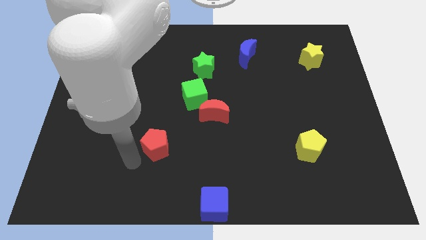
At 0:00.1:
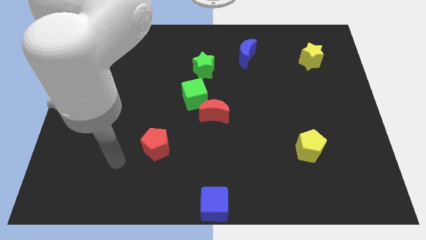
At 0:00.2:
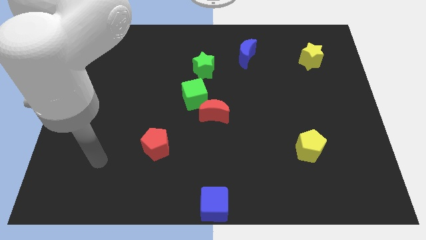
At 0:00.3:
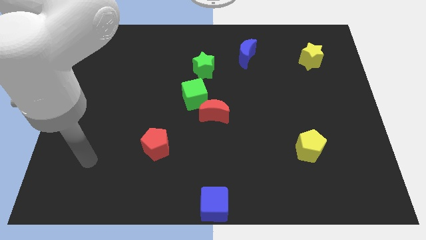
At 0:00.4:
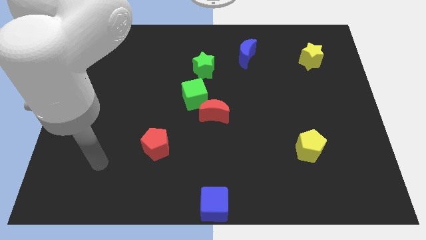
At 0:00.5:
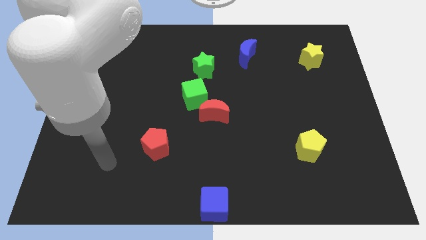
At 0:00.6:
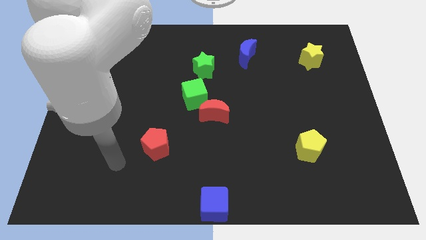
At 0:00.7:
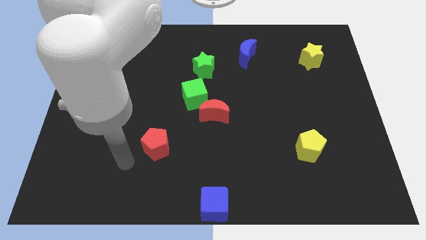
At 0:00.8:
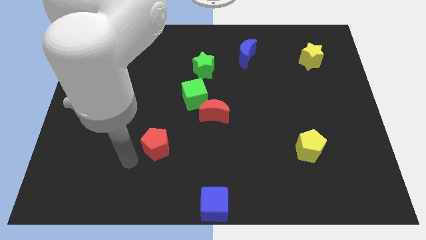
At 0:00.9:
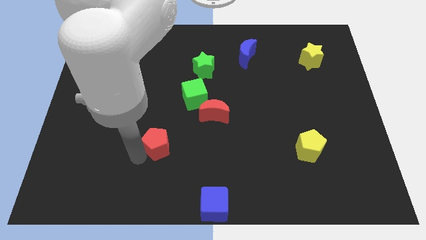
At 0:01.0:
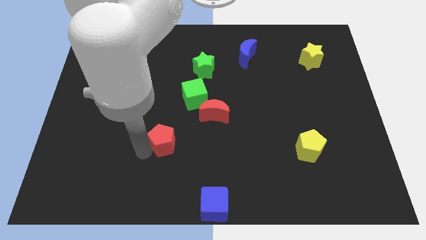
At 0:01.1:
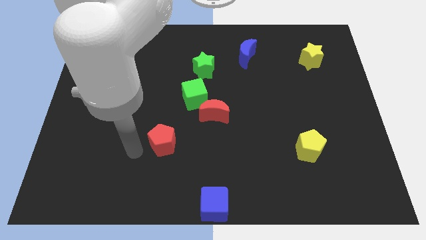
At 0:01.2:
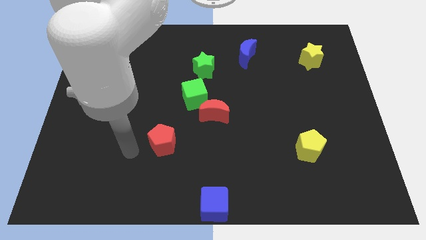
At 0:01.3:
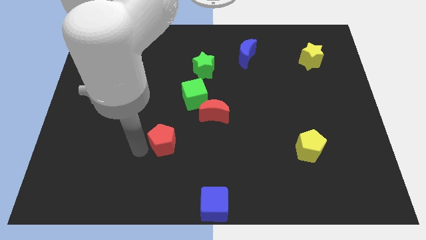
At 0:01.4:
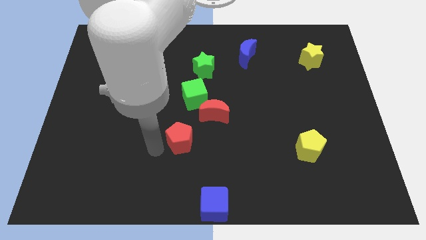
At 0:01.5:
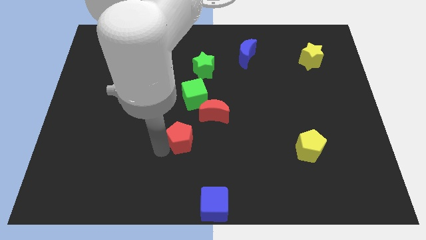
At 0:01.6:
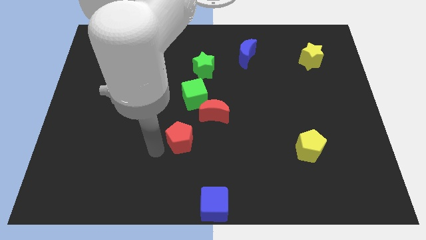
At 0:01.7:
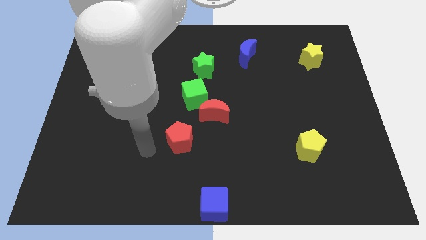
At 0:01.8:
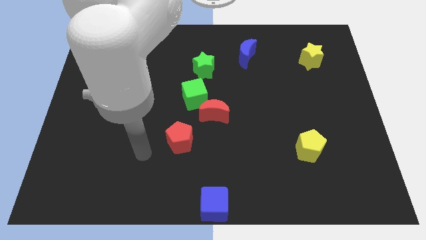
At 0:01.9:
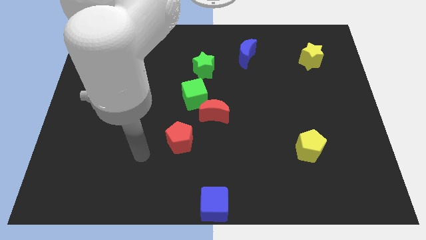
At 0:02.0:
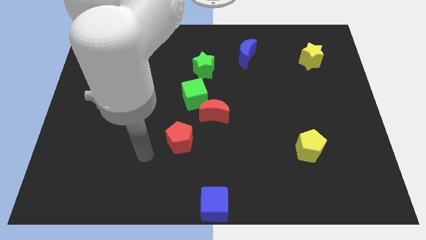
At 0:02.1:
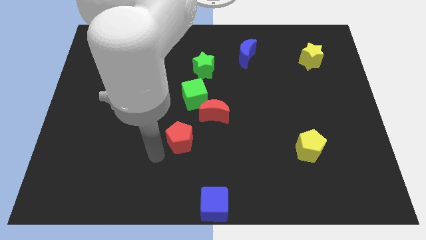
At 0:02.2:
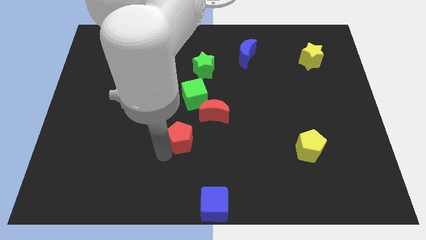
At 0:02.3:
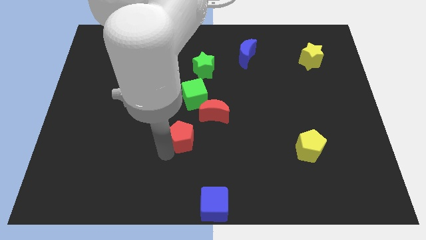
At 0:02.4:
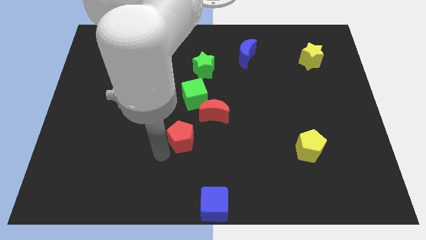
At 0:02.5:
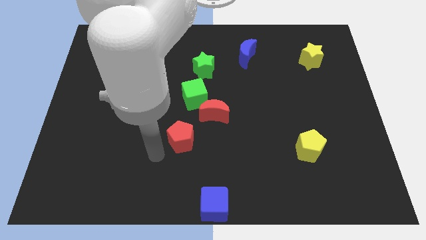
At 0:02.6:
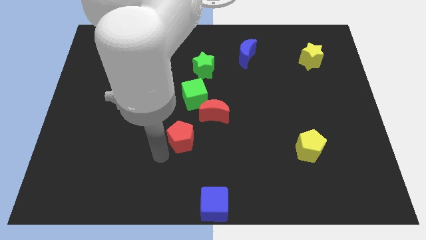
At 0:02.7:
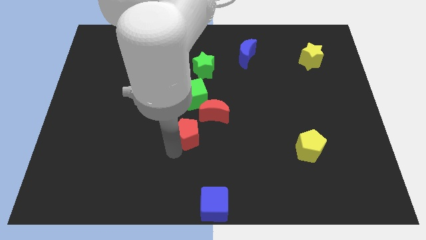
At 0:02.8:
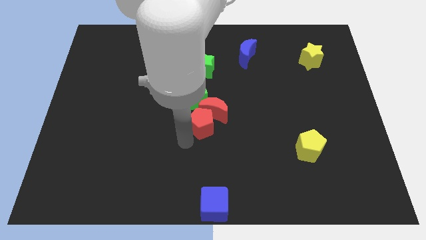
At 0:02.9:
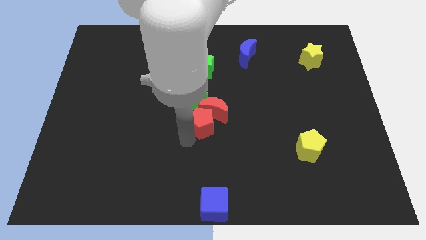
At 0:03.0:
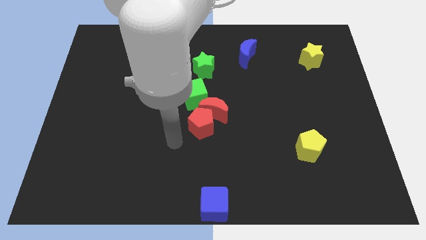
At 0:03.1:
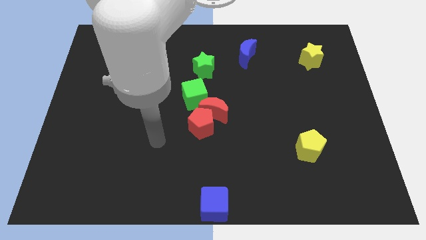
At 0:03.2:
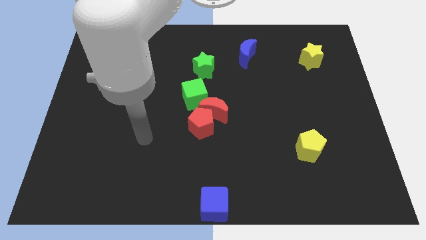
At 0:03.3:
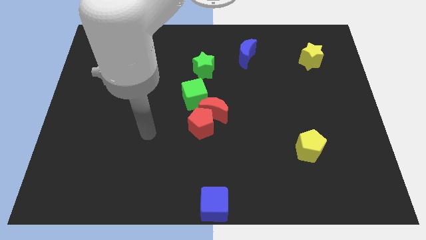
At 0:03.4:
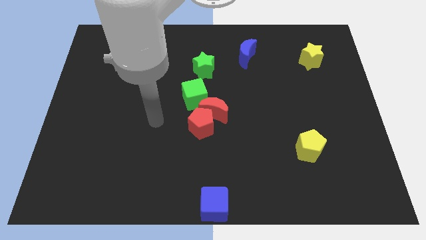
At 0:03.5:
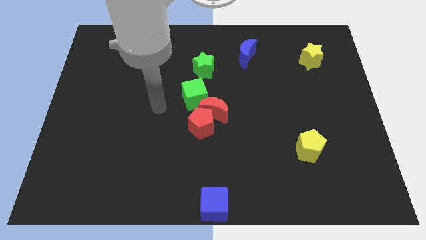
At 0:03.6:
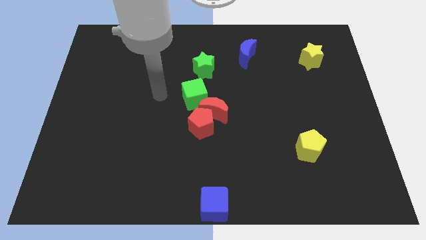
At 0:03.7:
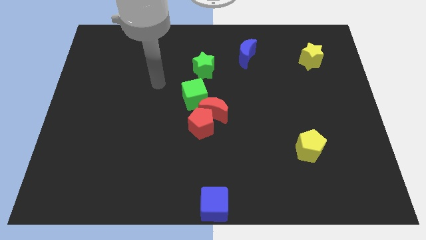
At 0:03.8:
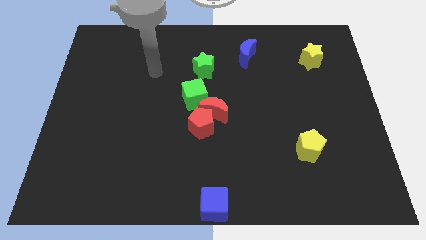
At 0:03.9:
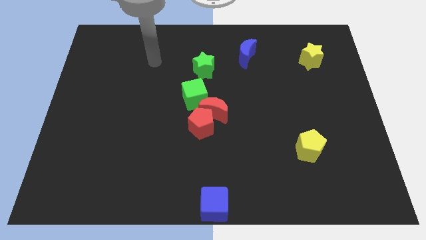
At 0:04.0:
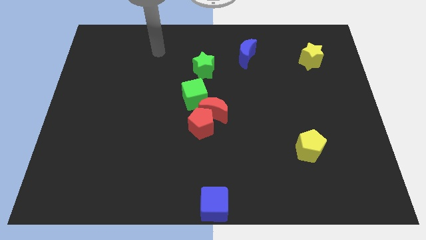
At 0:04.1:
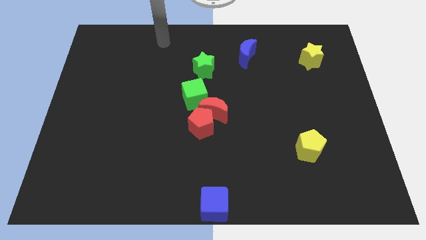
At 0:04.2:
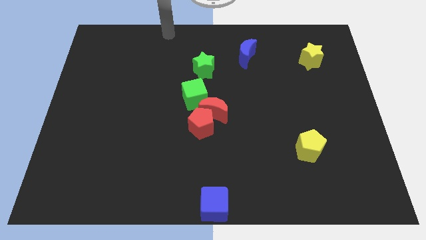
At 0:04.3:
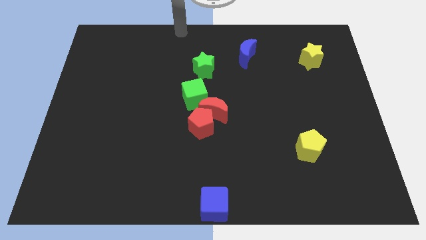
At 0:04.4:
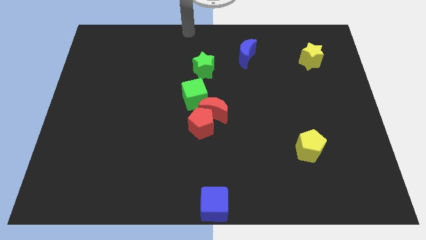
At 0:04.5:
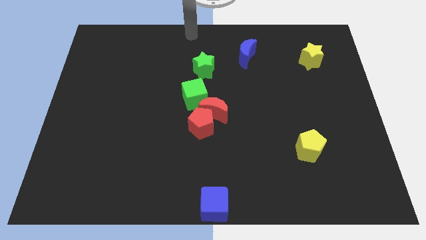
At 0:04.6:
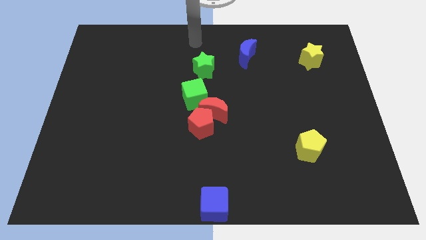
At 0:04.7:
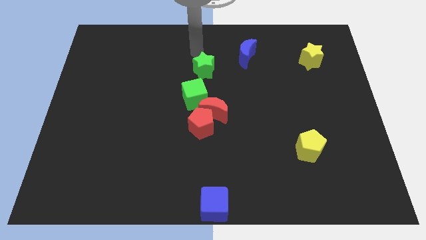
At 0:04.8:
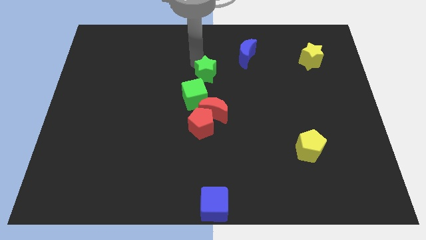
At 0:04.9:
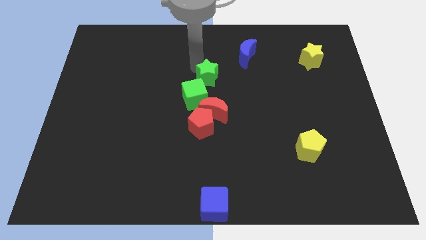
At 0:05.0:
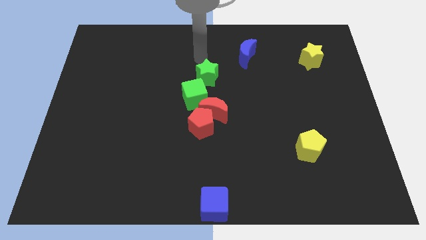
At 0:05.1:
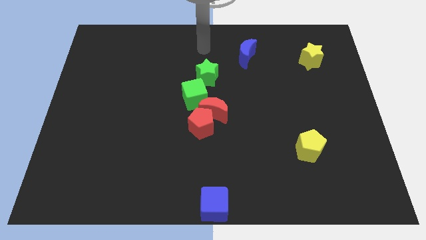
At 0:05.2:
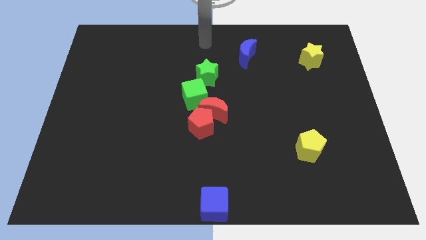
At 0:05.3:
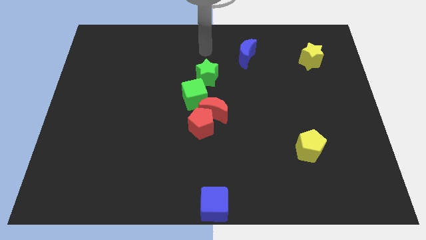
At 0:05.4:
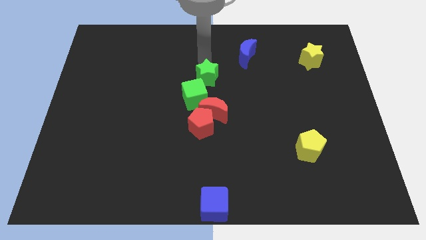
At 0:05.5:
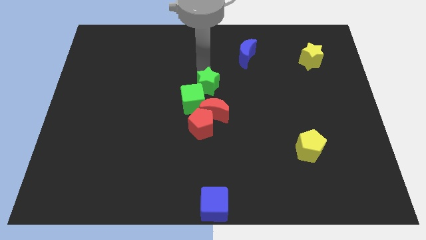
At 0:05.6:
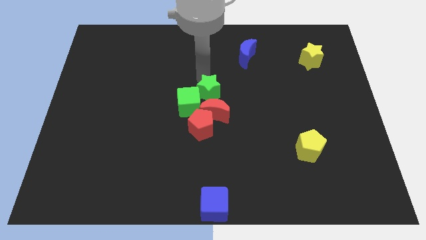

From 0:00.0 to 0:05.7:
push the red pentagon into the red moon

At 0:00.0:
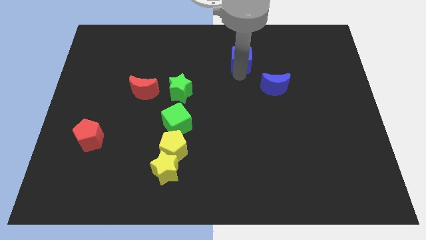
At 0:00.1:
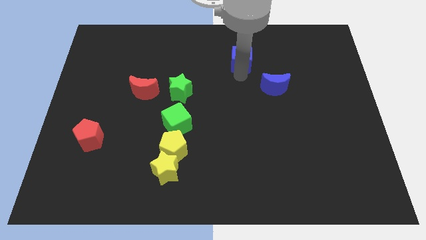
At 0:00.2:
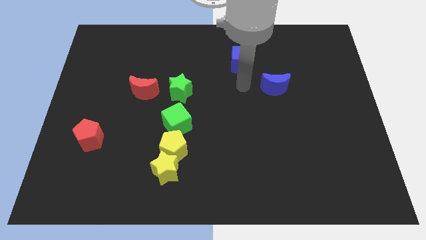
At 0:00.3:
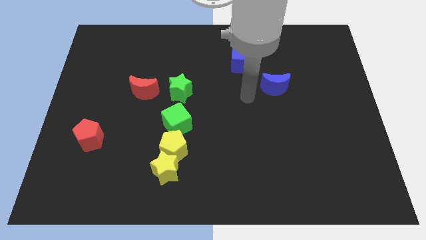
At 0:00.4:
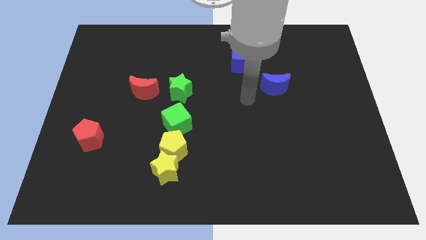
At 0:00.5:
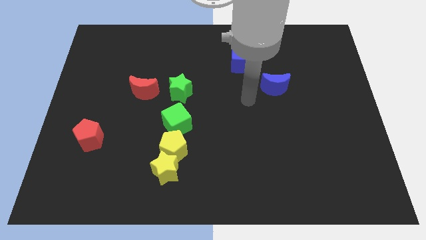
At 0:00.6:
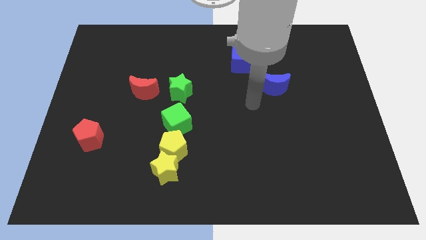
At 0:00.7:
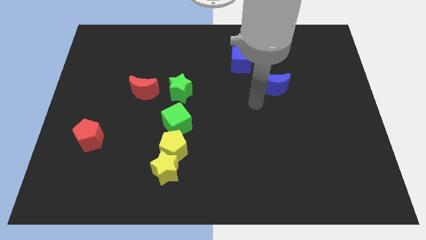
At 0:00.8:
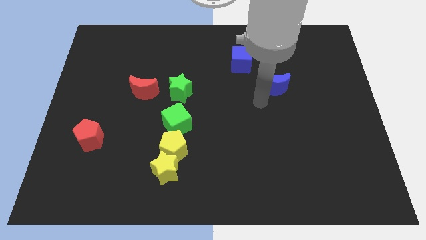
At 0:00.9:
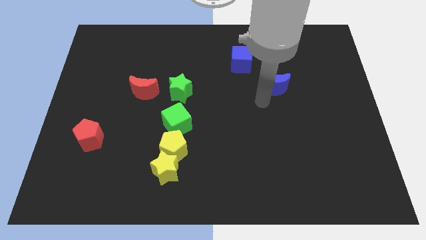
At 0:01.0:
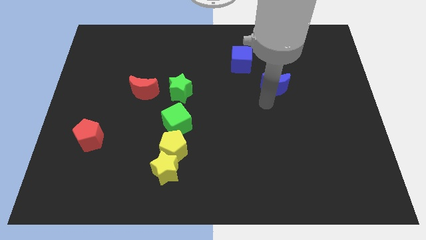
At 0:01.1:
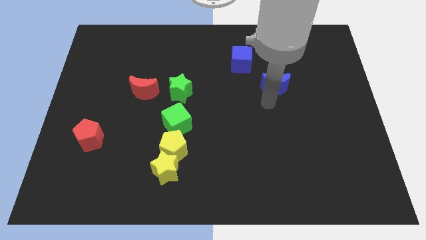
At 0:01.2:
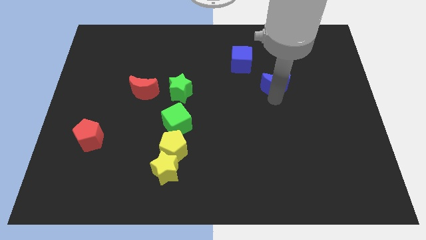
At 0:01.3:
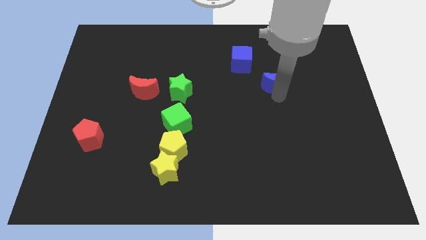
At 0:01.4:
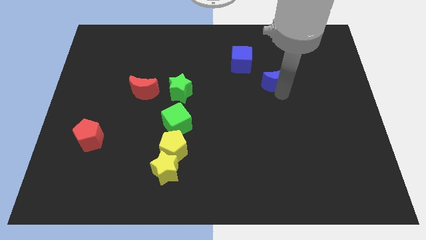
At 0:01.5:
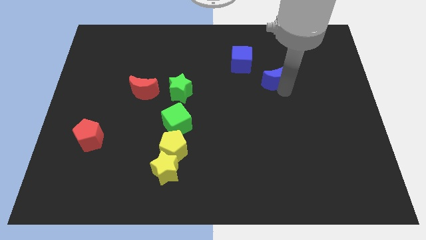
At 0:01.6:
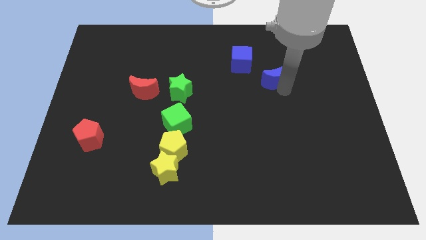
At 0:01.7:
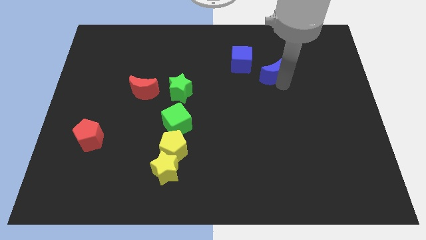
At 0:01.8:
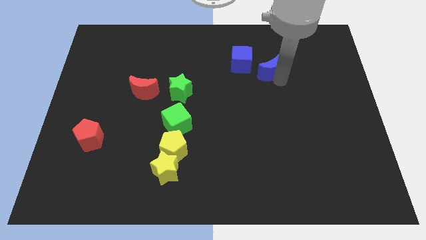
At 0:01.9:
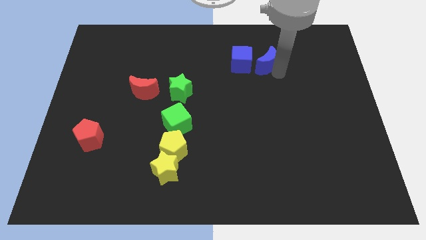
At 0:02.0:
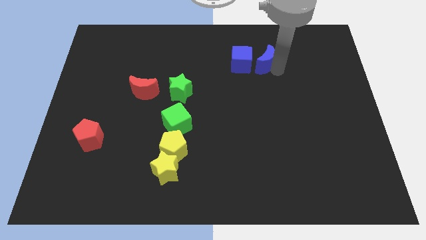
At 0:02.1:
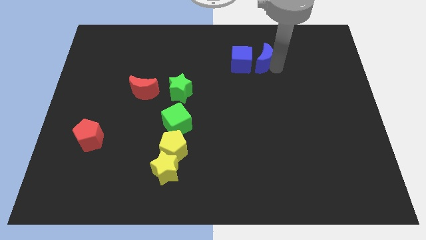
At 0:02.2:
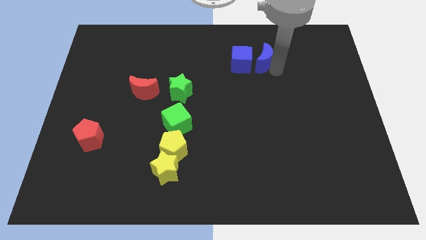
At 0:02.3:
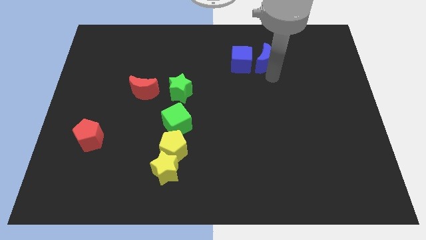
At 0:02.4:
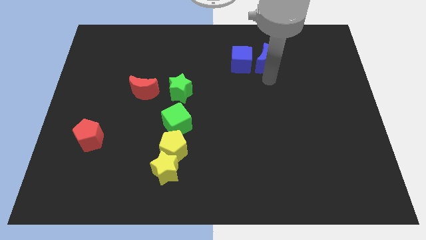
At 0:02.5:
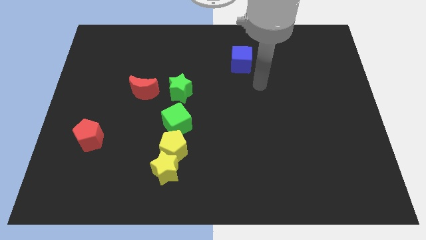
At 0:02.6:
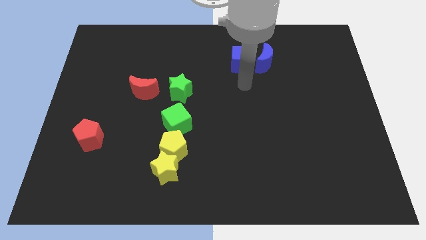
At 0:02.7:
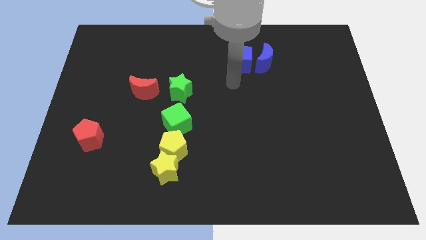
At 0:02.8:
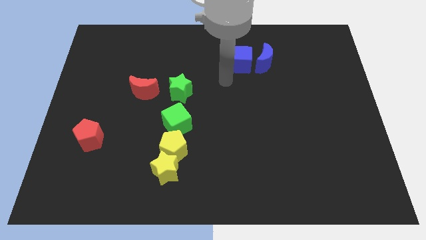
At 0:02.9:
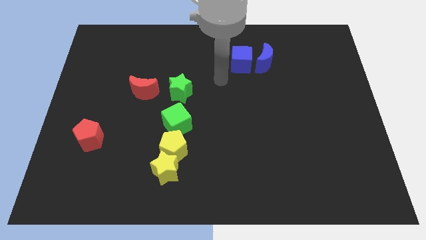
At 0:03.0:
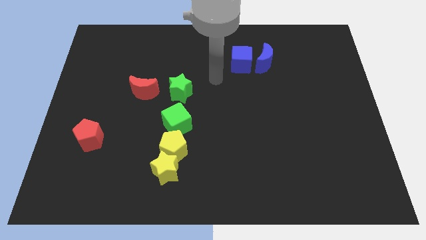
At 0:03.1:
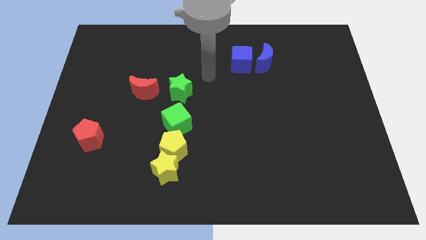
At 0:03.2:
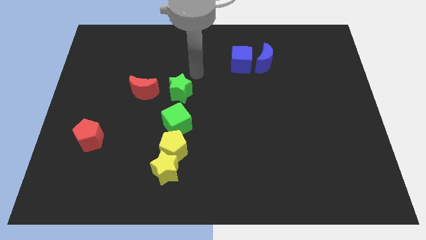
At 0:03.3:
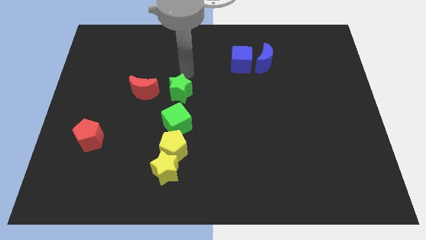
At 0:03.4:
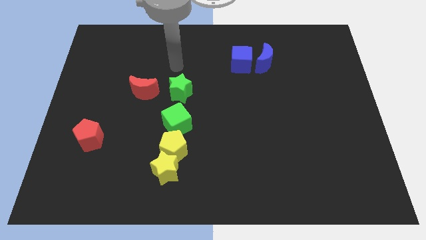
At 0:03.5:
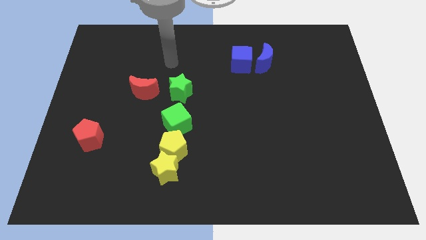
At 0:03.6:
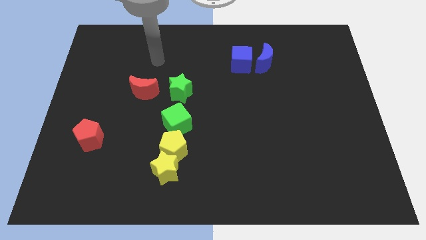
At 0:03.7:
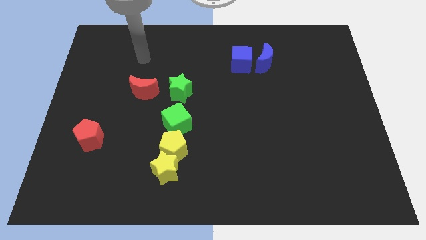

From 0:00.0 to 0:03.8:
place the blue moon to the right side of the blue cube
